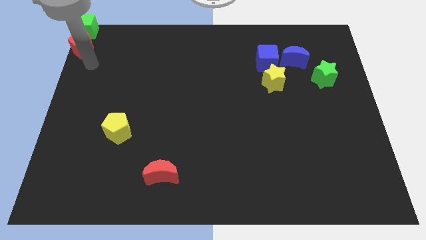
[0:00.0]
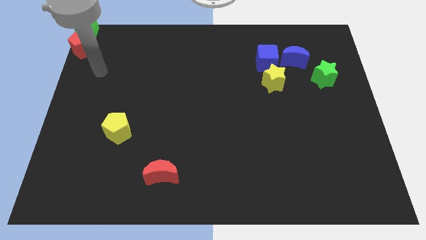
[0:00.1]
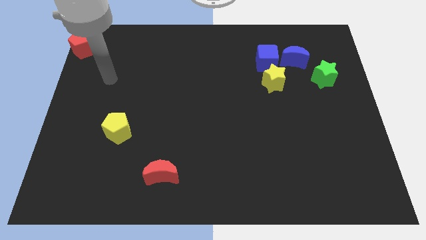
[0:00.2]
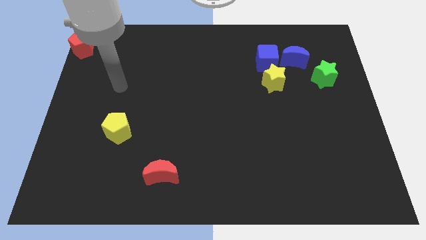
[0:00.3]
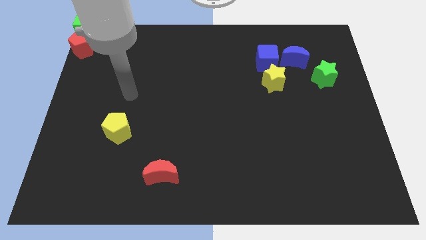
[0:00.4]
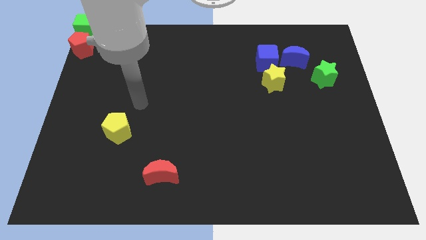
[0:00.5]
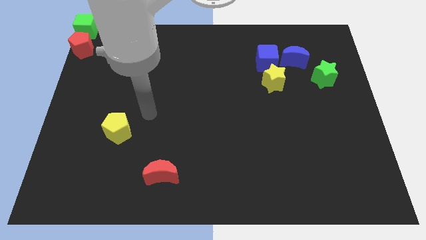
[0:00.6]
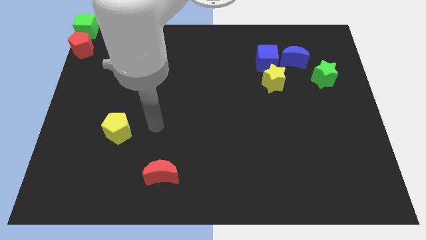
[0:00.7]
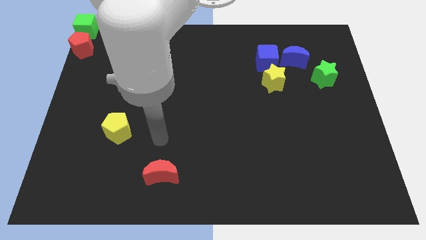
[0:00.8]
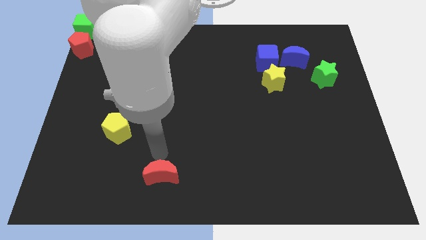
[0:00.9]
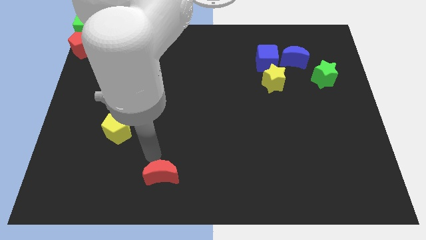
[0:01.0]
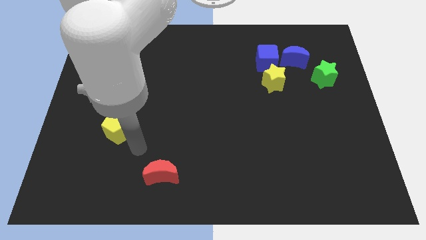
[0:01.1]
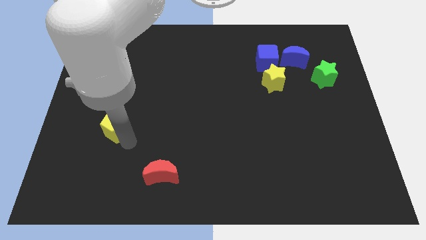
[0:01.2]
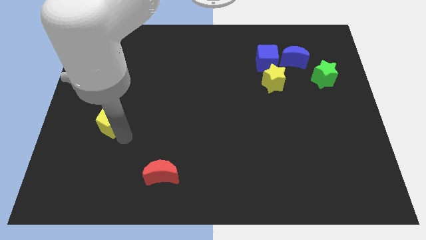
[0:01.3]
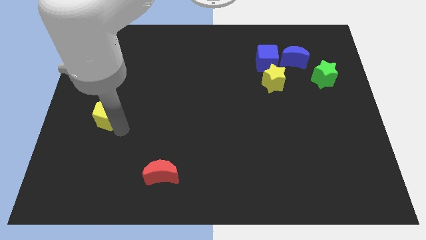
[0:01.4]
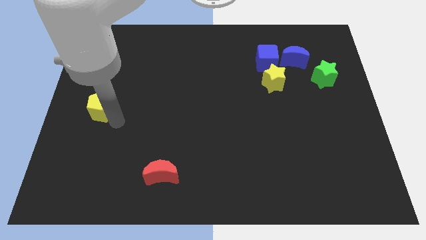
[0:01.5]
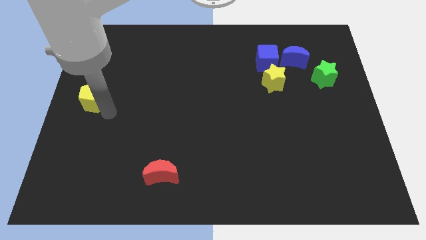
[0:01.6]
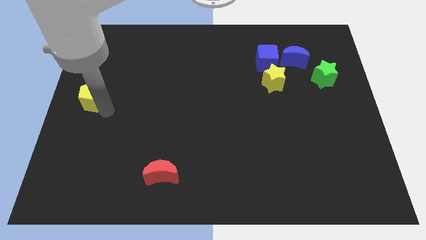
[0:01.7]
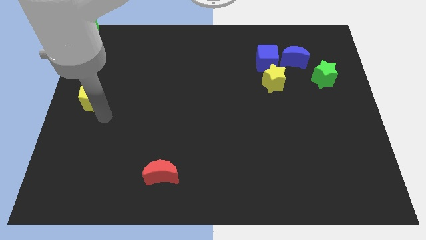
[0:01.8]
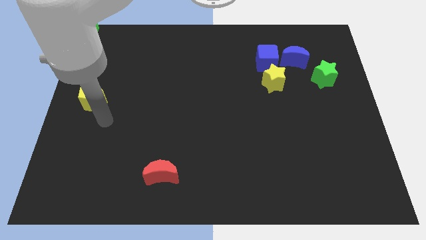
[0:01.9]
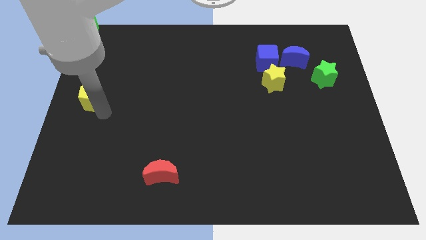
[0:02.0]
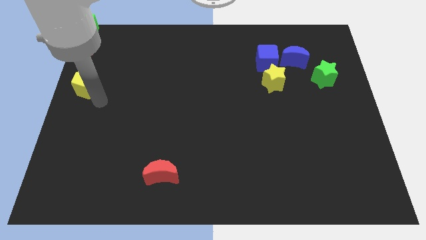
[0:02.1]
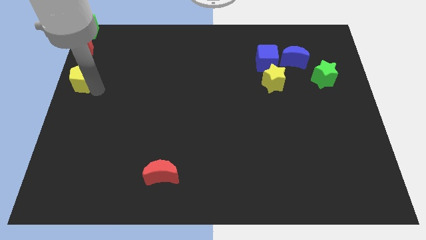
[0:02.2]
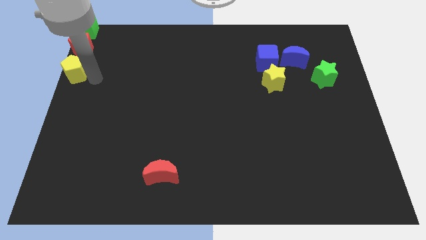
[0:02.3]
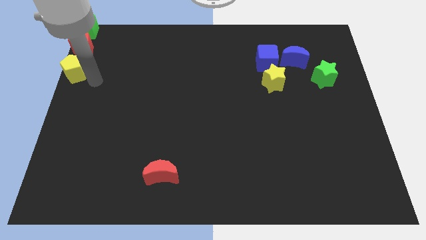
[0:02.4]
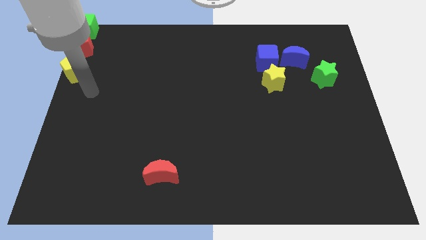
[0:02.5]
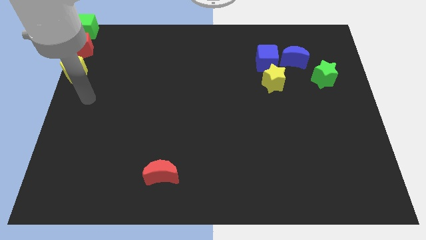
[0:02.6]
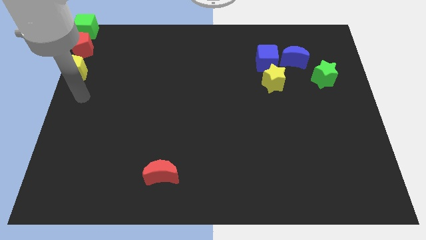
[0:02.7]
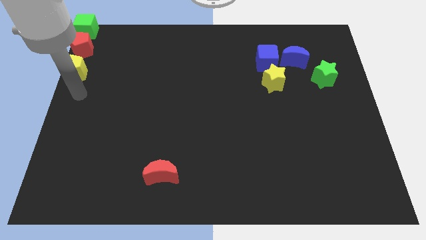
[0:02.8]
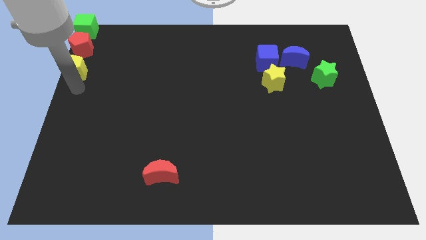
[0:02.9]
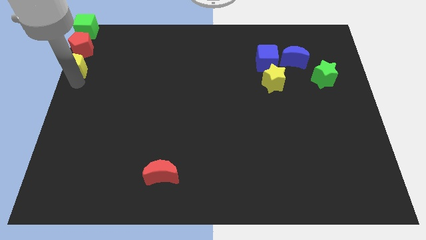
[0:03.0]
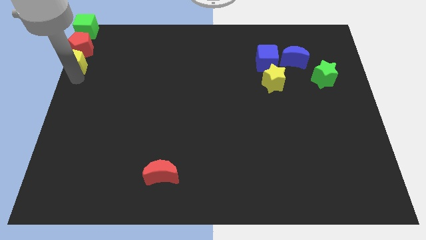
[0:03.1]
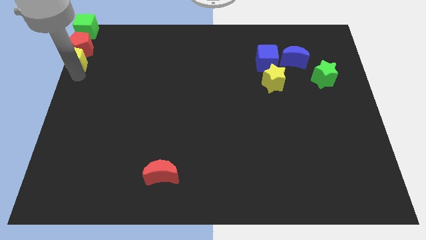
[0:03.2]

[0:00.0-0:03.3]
push the yellow pentagon to the bottom of the red pentagon

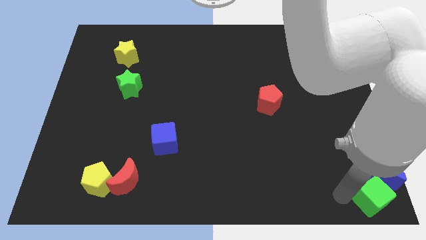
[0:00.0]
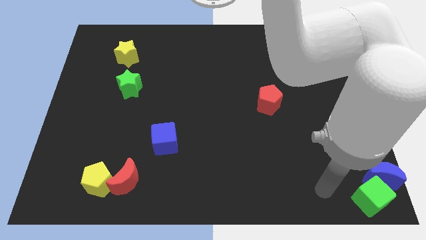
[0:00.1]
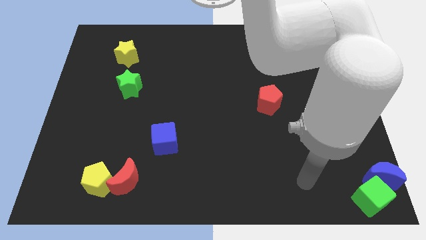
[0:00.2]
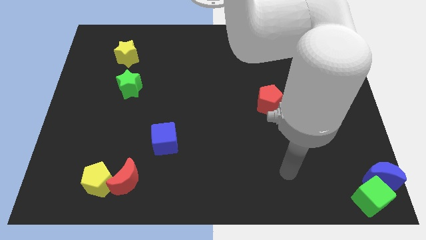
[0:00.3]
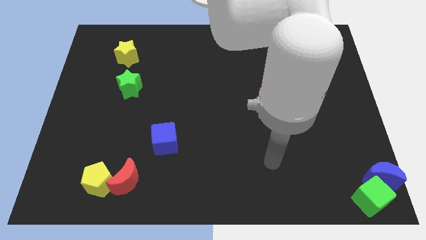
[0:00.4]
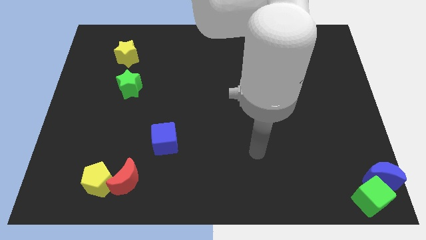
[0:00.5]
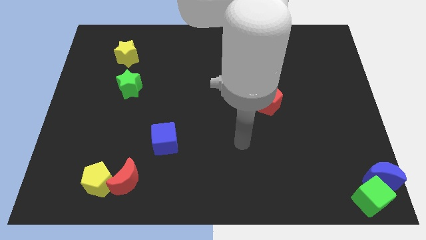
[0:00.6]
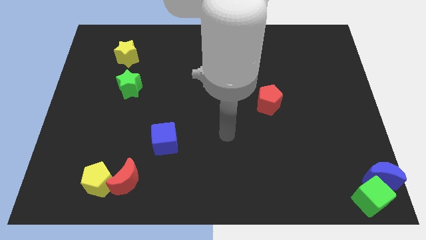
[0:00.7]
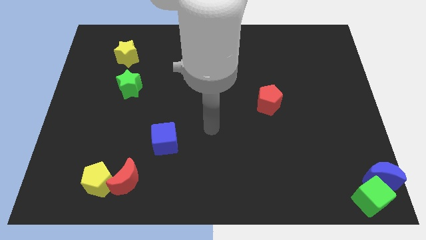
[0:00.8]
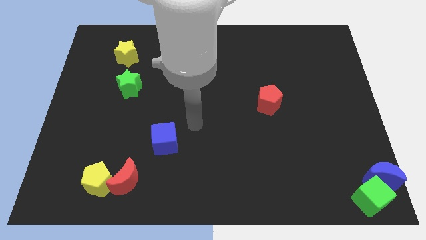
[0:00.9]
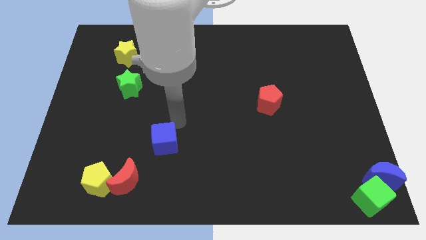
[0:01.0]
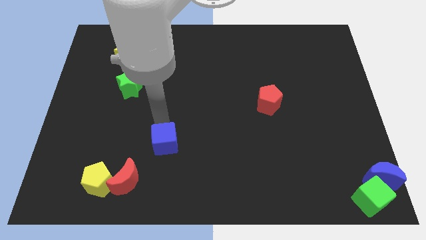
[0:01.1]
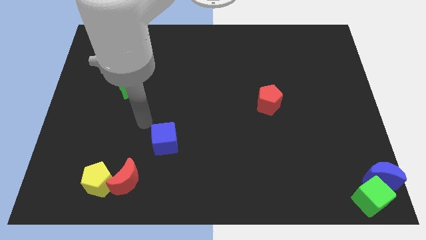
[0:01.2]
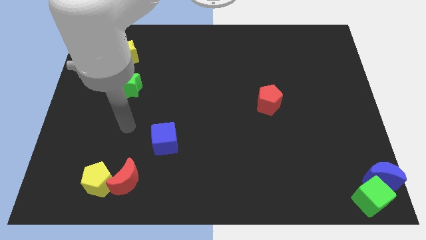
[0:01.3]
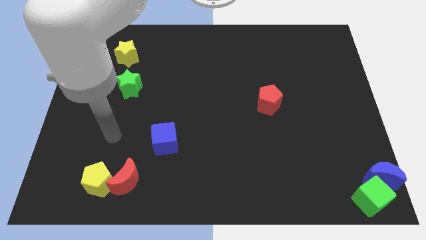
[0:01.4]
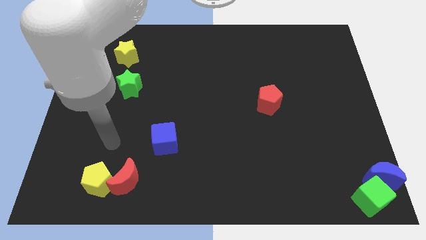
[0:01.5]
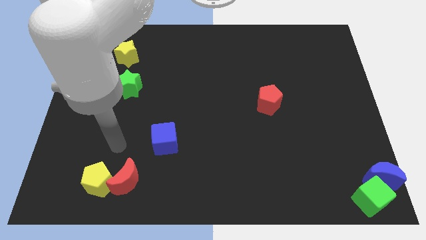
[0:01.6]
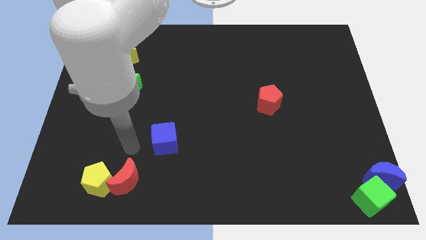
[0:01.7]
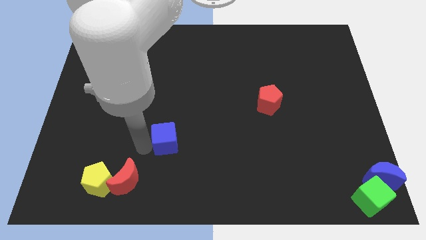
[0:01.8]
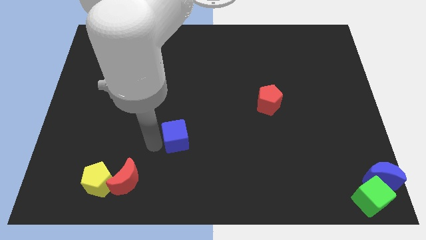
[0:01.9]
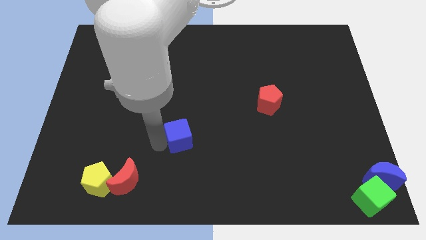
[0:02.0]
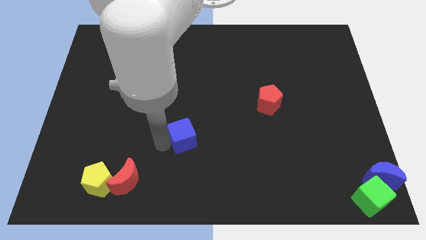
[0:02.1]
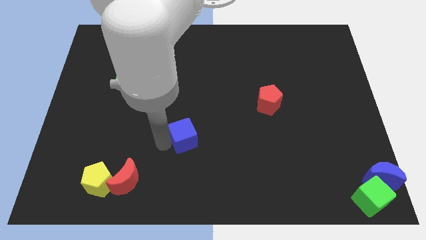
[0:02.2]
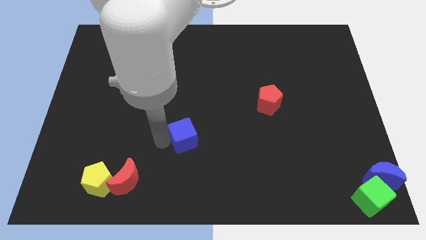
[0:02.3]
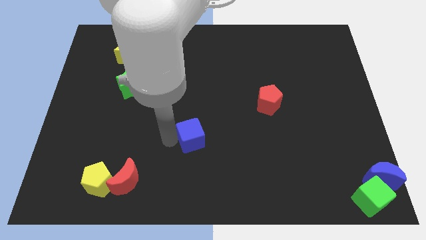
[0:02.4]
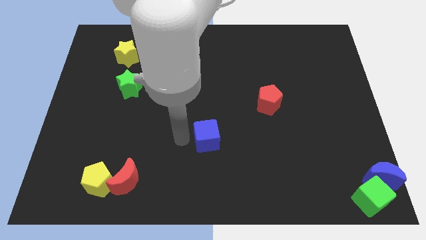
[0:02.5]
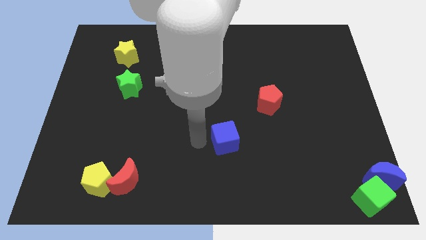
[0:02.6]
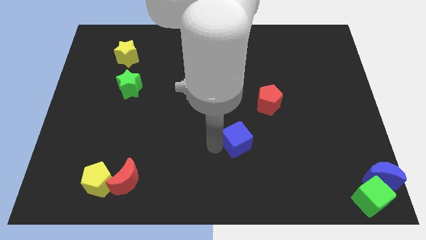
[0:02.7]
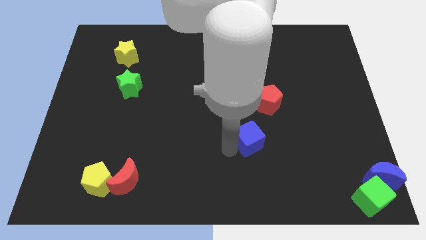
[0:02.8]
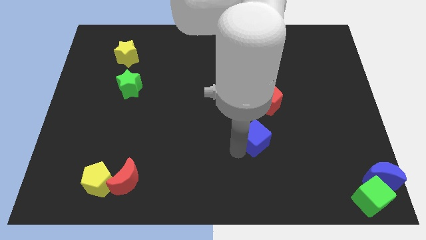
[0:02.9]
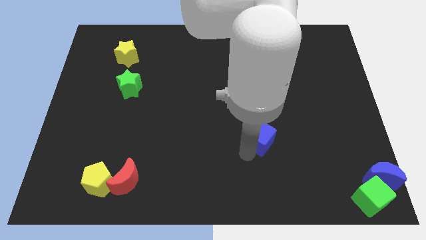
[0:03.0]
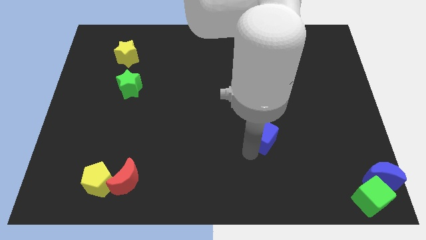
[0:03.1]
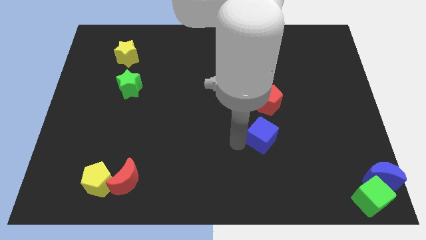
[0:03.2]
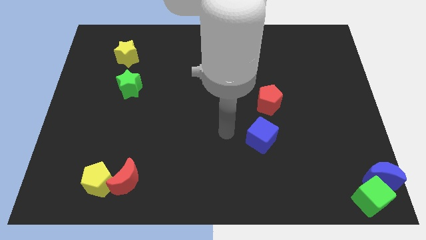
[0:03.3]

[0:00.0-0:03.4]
put the blue cube below the red pentagon

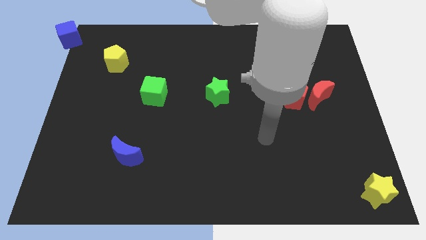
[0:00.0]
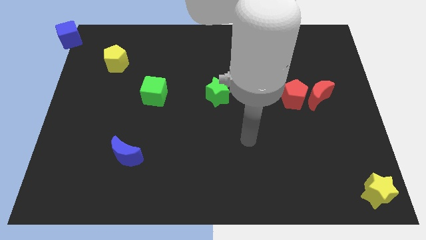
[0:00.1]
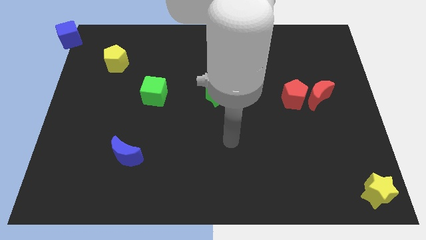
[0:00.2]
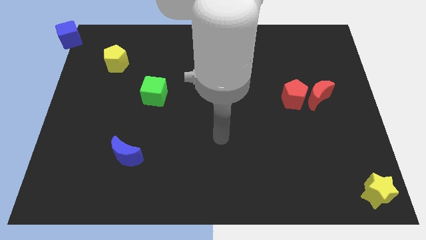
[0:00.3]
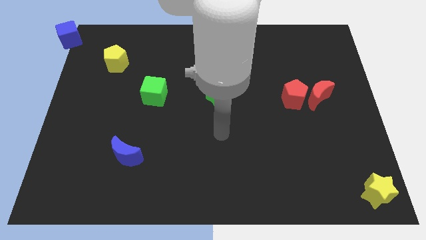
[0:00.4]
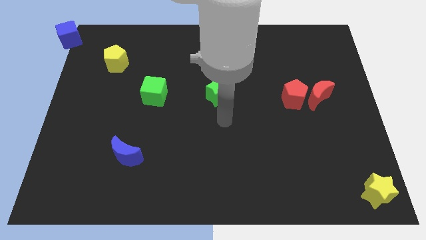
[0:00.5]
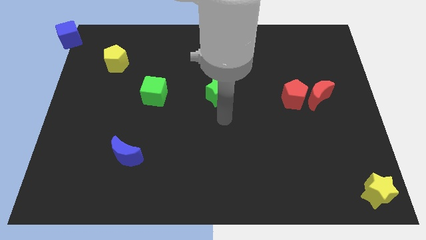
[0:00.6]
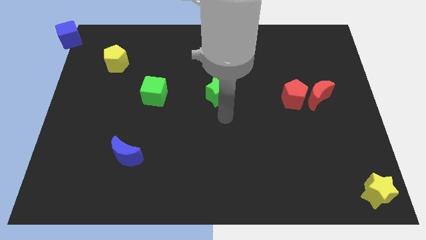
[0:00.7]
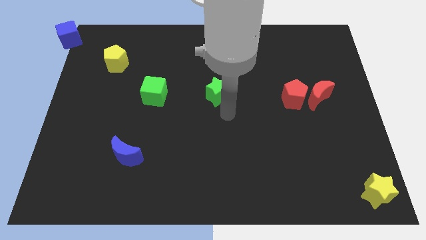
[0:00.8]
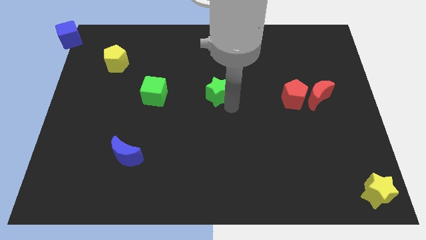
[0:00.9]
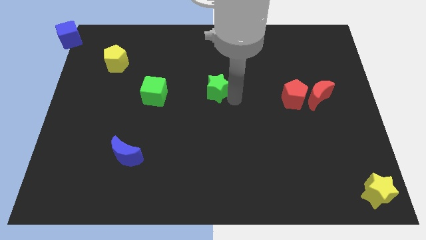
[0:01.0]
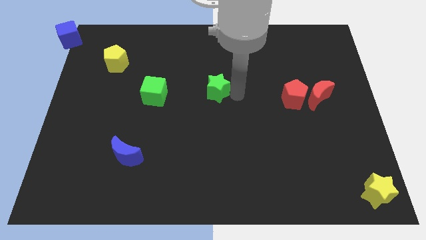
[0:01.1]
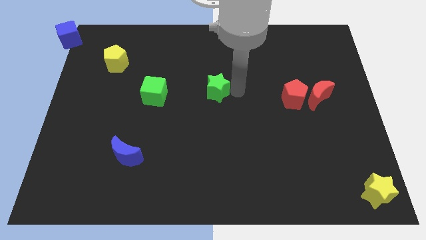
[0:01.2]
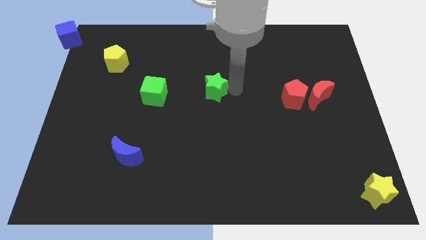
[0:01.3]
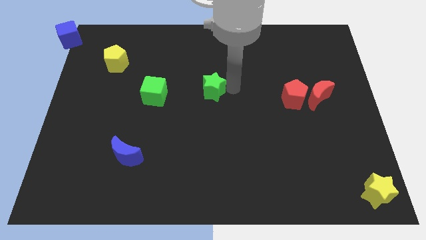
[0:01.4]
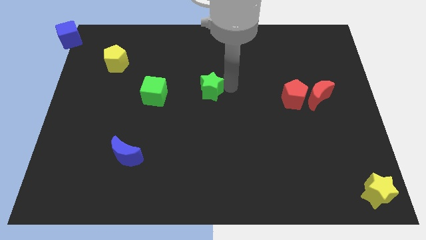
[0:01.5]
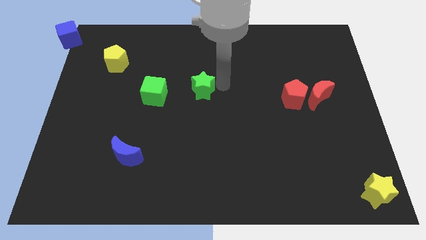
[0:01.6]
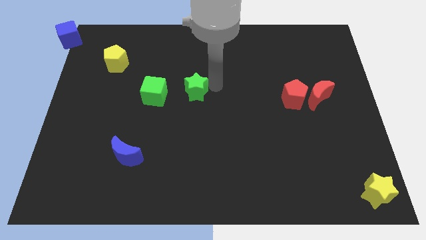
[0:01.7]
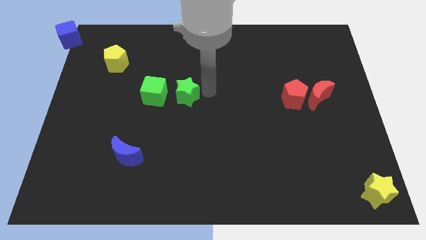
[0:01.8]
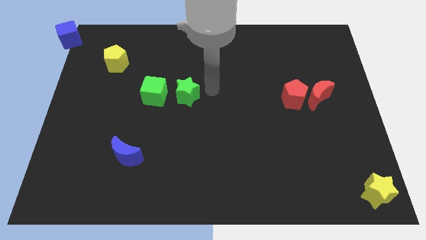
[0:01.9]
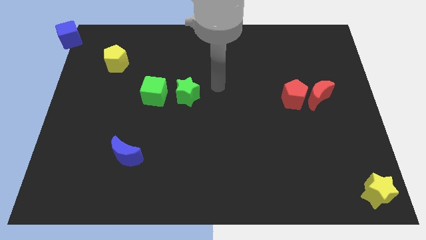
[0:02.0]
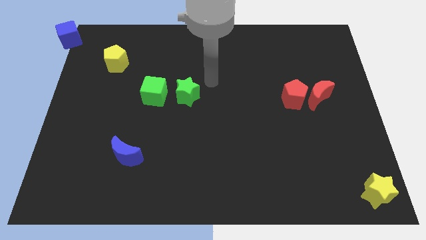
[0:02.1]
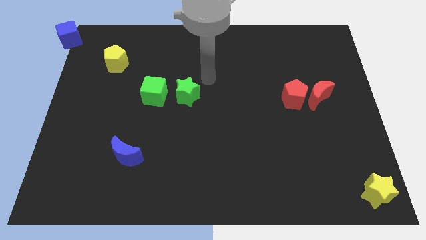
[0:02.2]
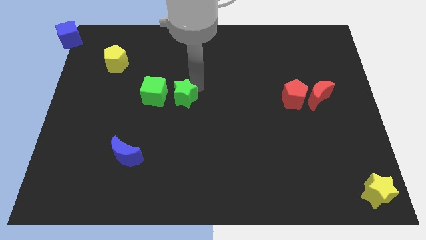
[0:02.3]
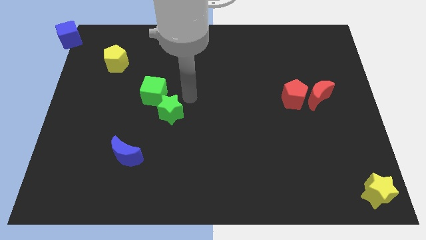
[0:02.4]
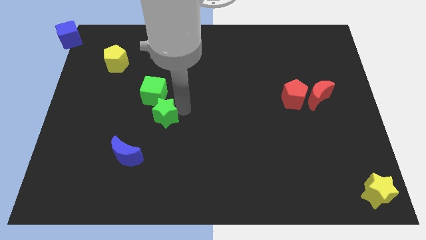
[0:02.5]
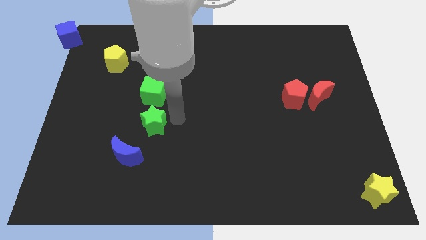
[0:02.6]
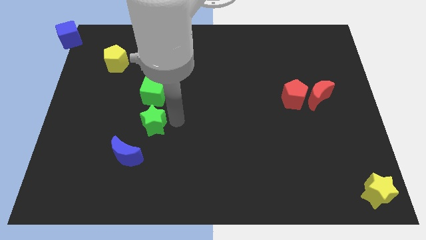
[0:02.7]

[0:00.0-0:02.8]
push the green star towards the bottom of green cube
